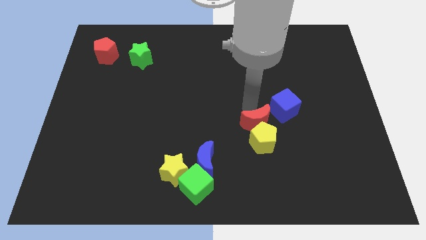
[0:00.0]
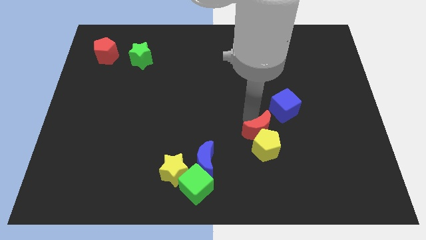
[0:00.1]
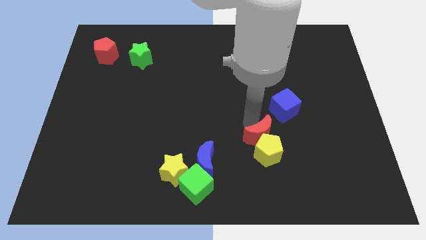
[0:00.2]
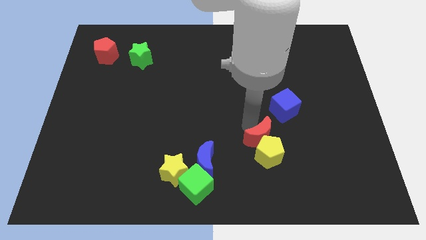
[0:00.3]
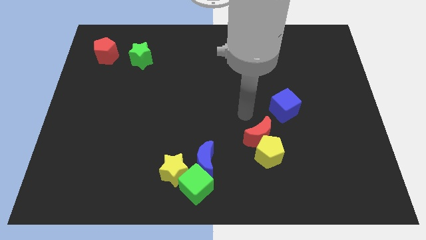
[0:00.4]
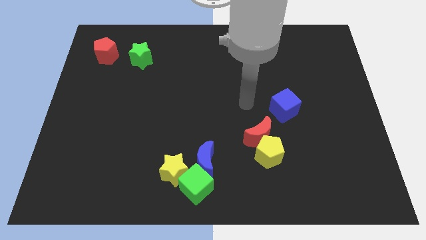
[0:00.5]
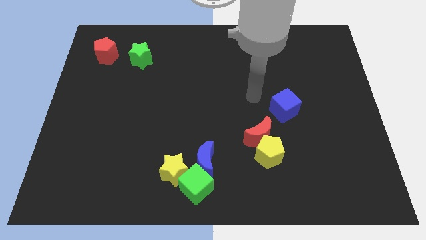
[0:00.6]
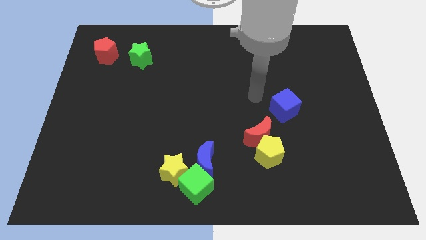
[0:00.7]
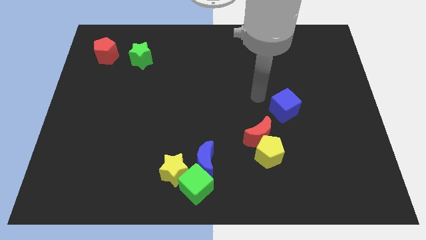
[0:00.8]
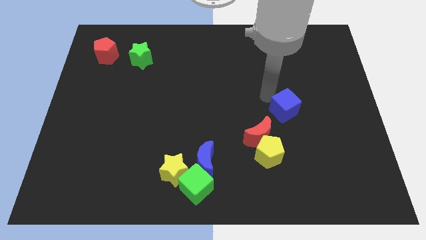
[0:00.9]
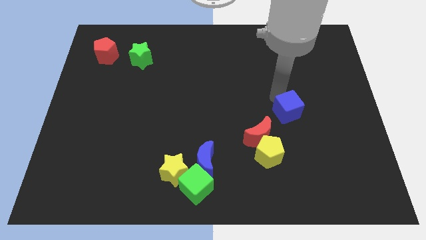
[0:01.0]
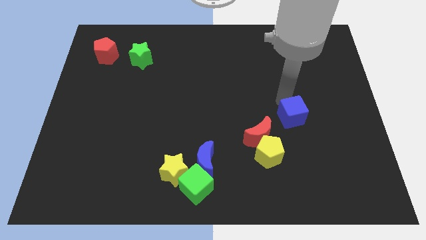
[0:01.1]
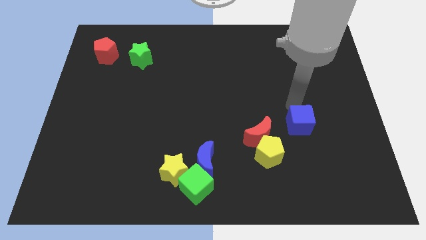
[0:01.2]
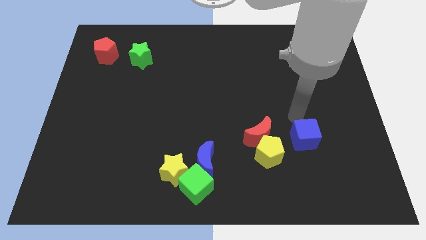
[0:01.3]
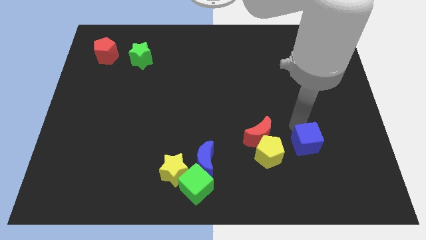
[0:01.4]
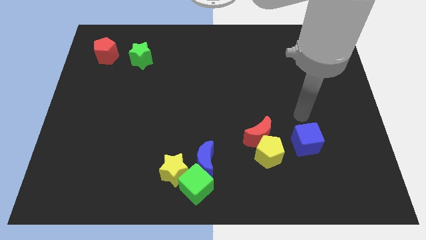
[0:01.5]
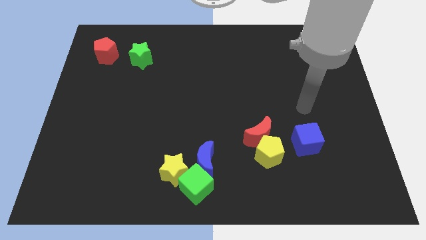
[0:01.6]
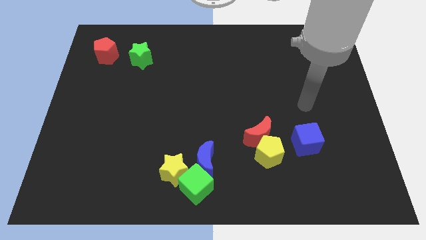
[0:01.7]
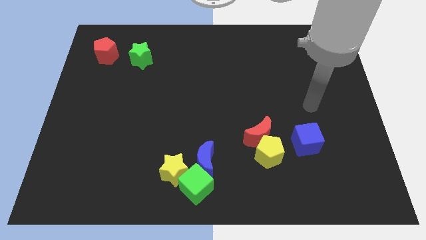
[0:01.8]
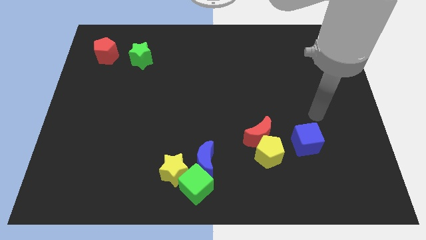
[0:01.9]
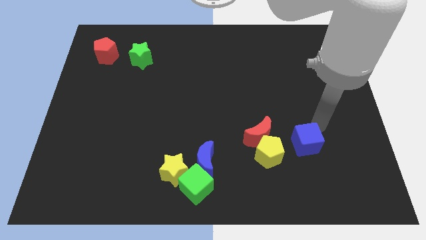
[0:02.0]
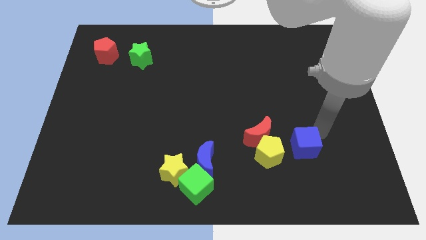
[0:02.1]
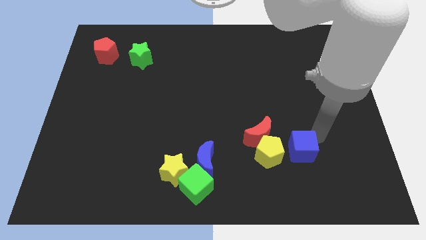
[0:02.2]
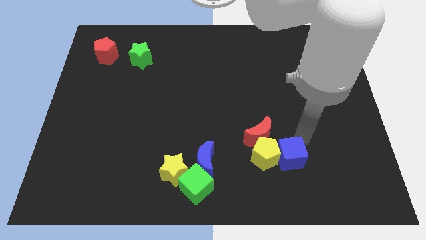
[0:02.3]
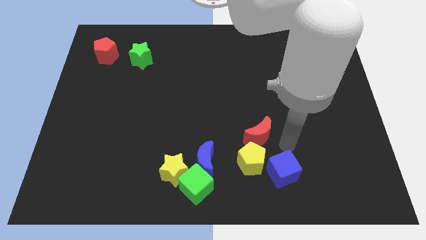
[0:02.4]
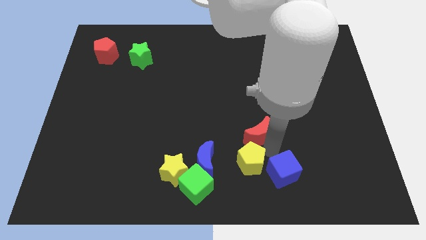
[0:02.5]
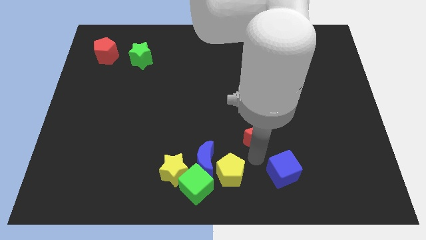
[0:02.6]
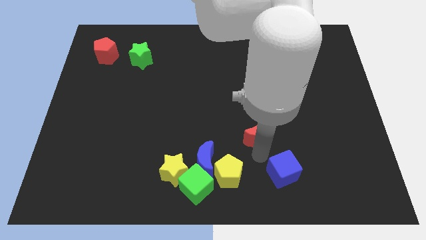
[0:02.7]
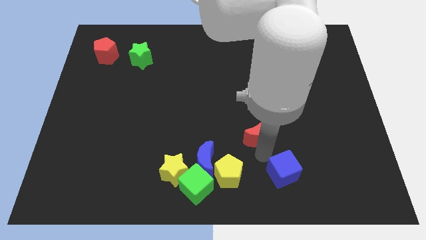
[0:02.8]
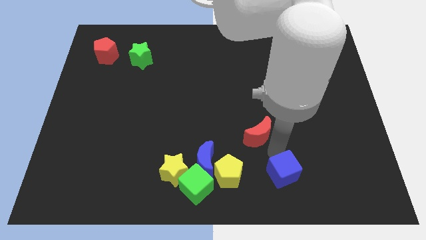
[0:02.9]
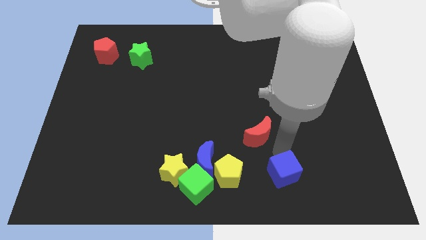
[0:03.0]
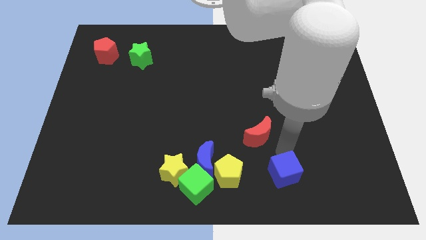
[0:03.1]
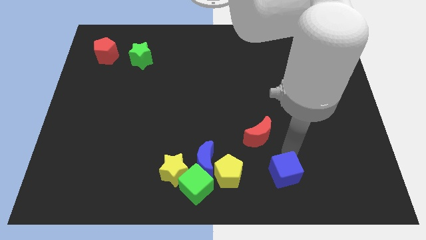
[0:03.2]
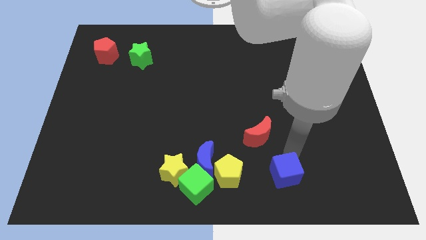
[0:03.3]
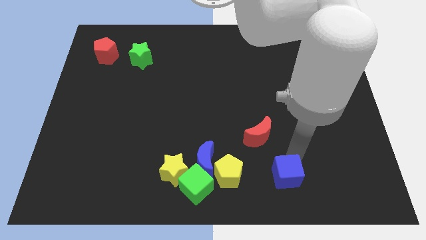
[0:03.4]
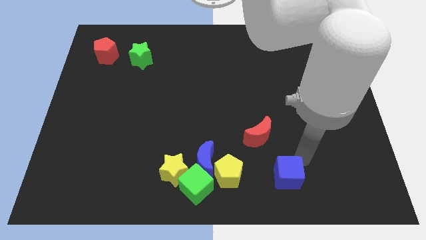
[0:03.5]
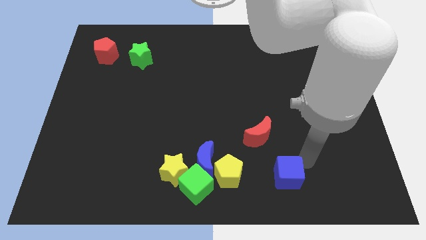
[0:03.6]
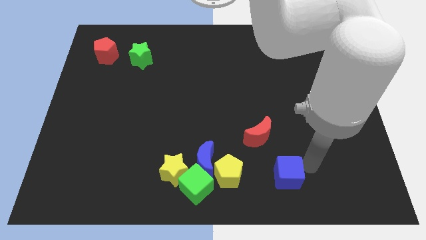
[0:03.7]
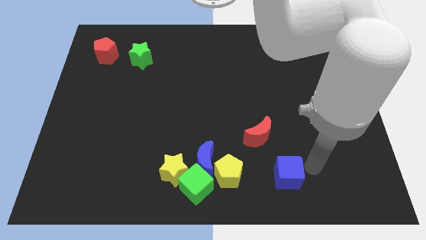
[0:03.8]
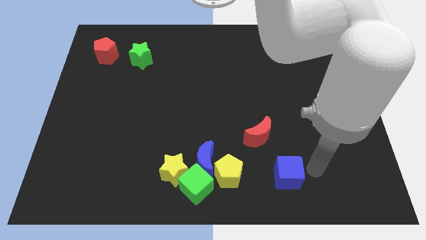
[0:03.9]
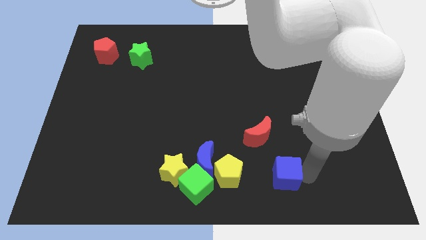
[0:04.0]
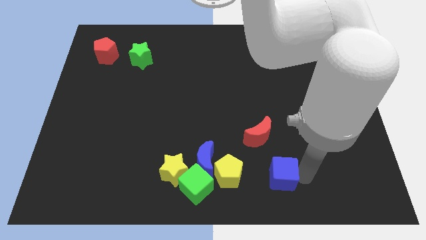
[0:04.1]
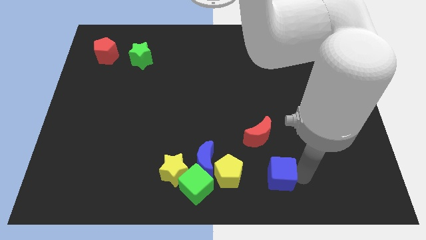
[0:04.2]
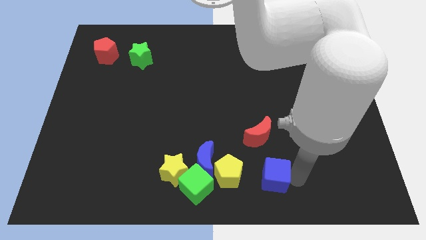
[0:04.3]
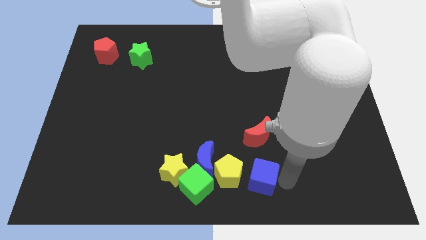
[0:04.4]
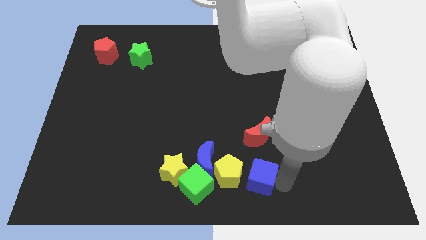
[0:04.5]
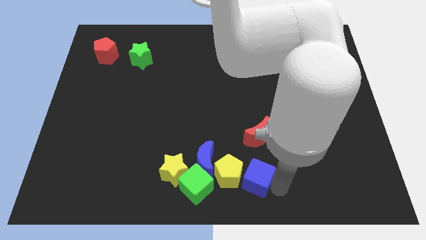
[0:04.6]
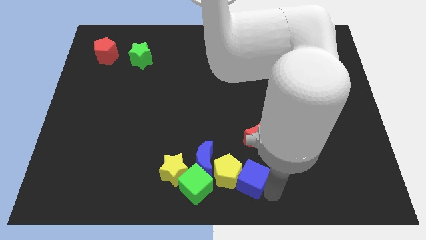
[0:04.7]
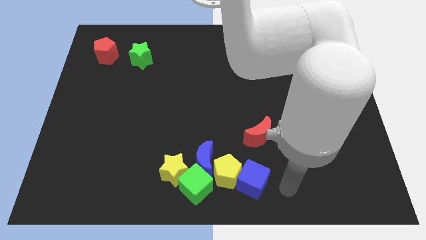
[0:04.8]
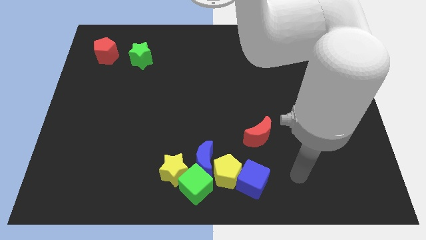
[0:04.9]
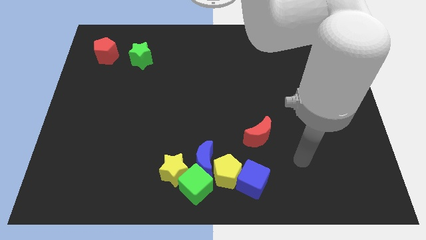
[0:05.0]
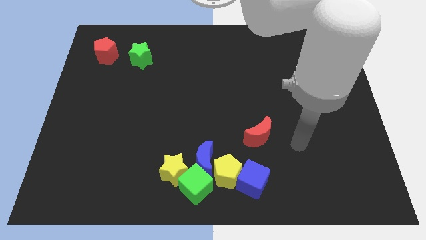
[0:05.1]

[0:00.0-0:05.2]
push the yellow pentagon to the bottom center of the board

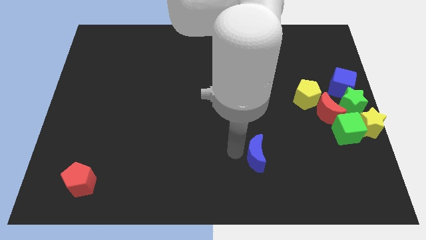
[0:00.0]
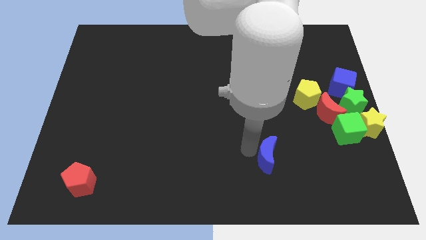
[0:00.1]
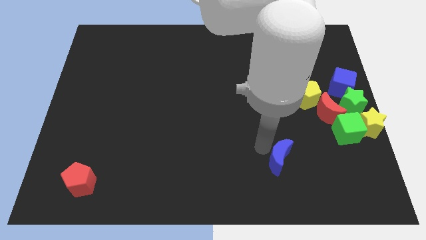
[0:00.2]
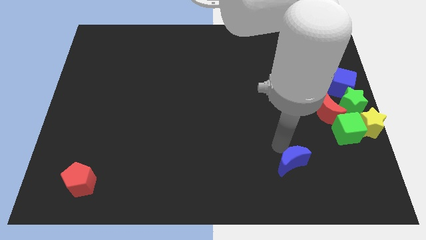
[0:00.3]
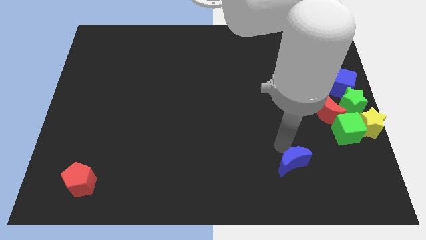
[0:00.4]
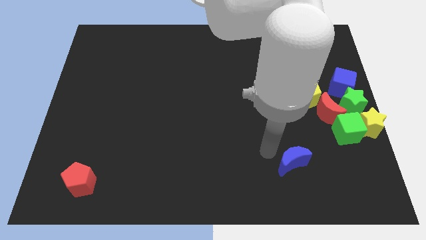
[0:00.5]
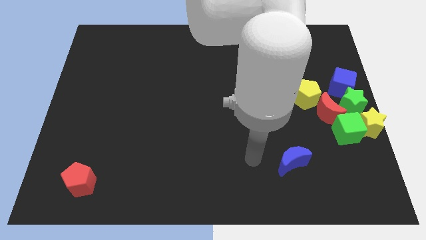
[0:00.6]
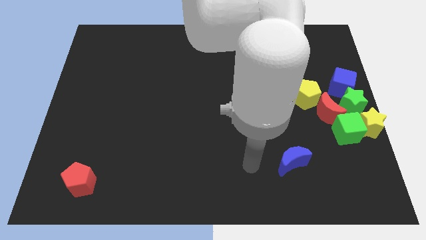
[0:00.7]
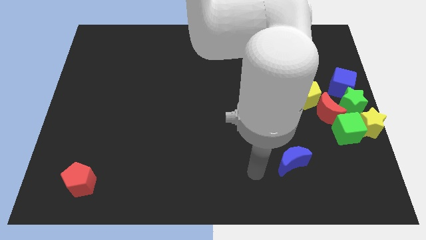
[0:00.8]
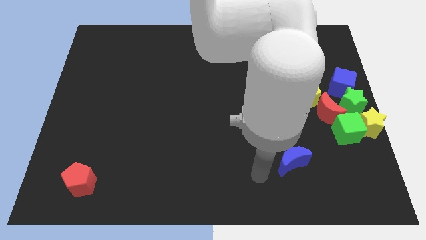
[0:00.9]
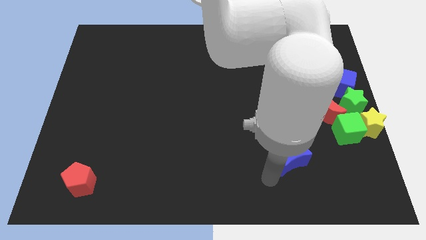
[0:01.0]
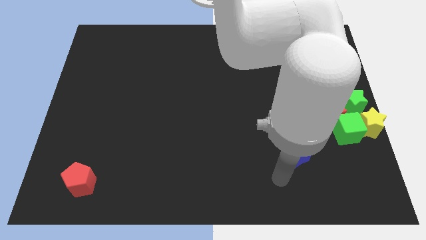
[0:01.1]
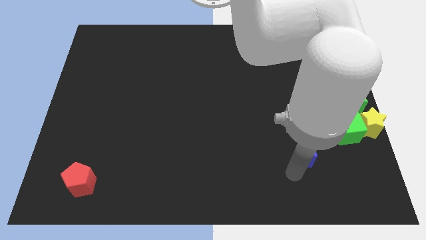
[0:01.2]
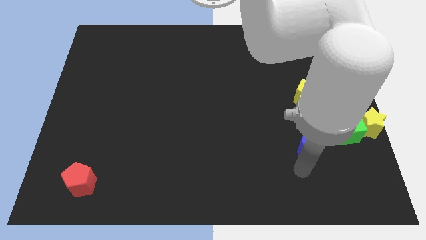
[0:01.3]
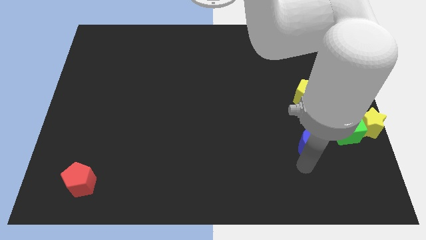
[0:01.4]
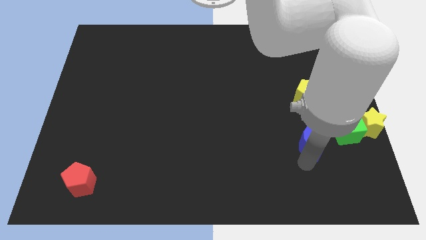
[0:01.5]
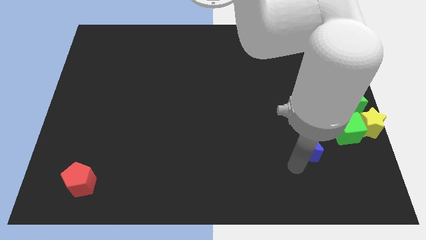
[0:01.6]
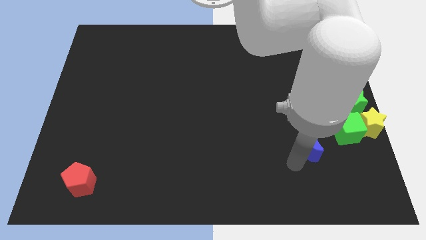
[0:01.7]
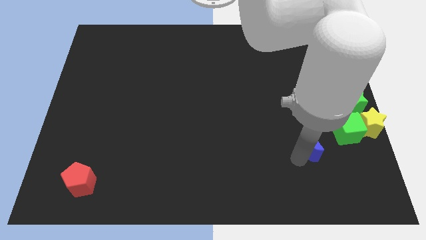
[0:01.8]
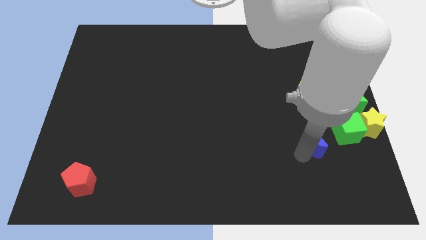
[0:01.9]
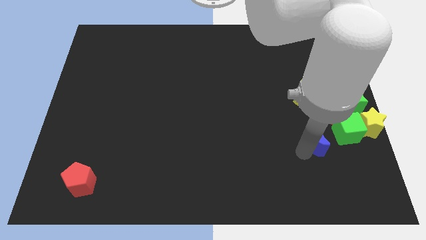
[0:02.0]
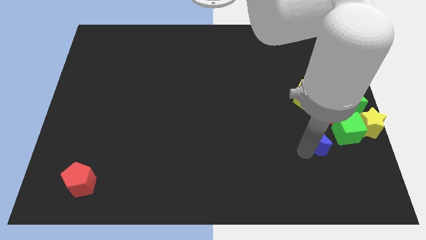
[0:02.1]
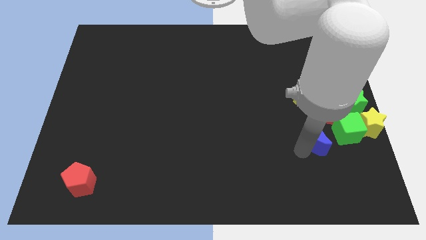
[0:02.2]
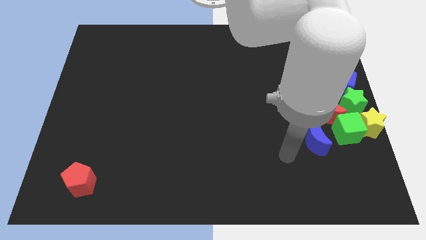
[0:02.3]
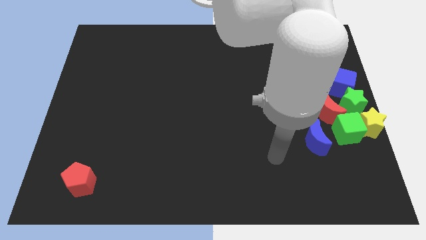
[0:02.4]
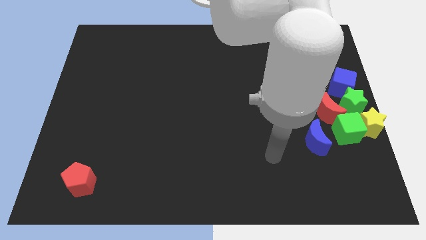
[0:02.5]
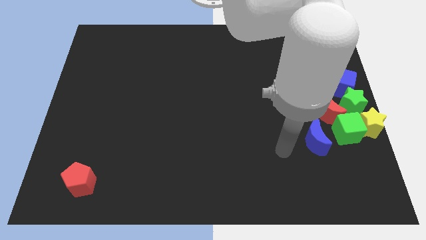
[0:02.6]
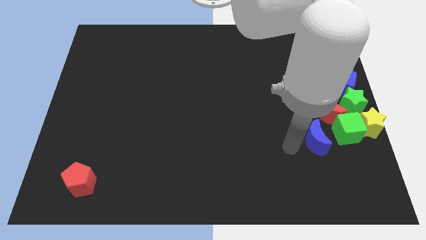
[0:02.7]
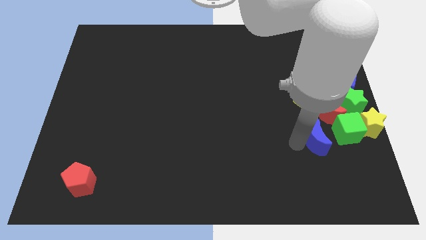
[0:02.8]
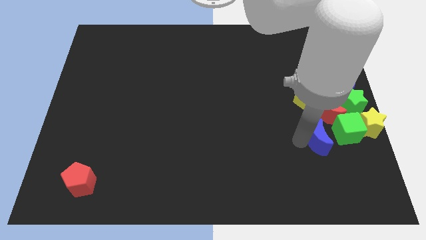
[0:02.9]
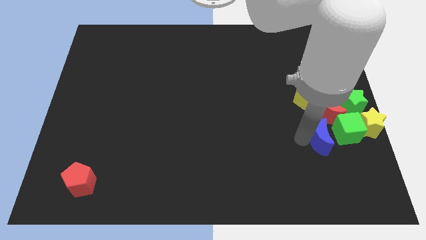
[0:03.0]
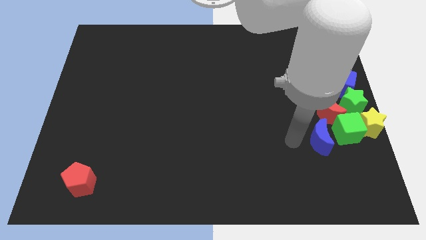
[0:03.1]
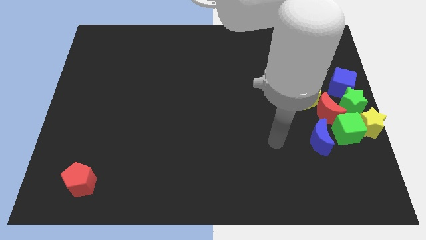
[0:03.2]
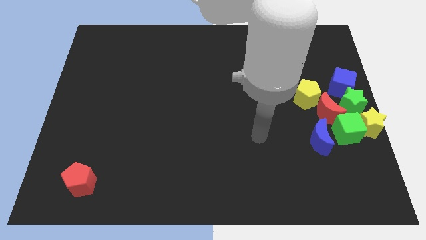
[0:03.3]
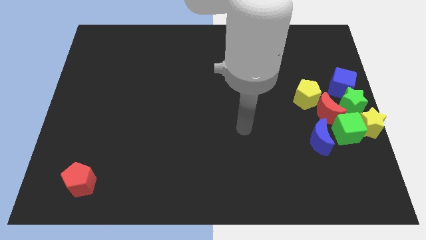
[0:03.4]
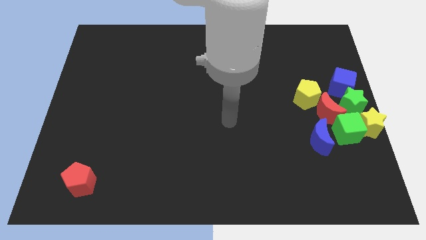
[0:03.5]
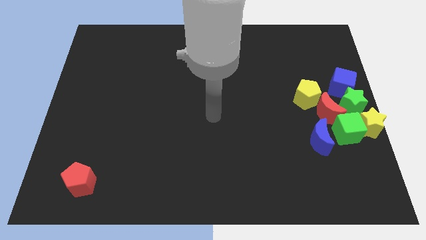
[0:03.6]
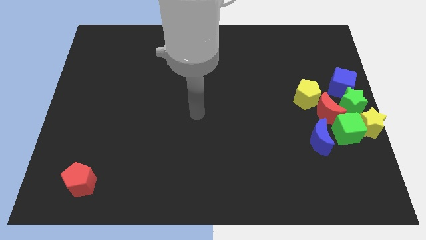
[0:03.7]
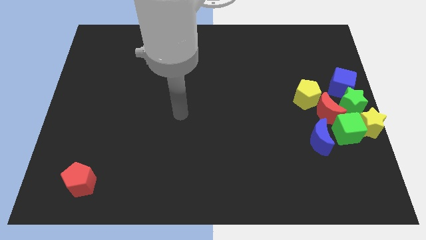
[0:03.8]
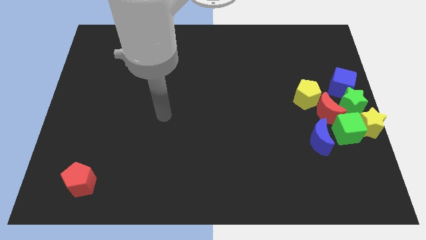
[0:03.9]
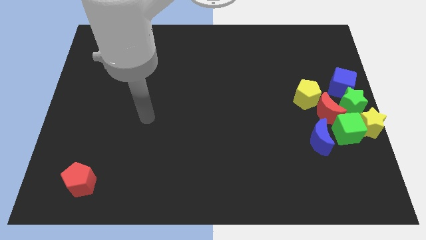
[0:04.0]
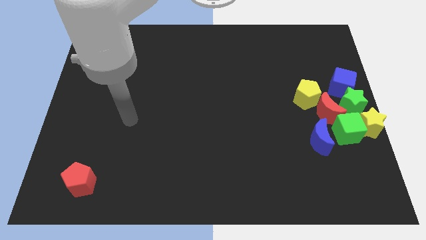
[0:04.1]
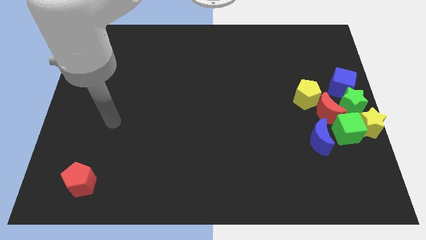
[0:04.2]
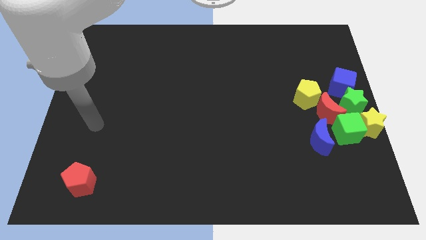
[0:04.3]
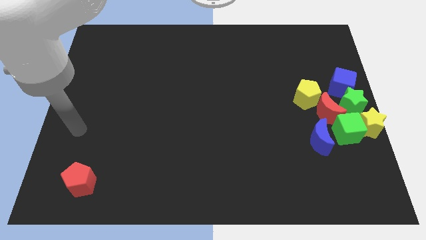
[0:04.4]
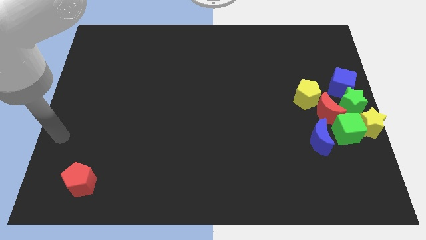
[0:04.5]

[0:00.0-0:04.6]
place the blue moon to the left of the green cube
